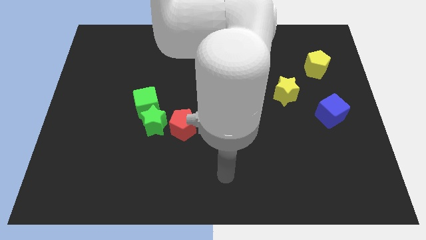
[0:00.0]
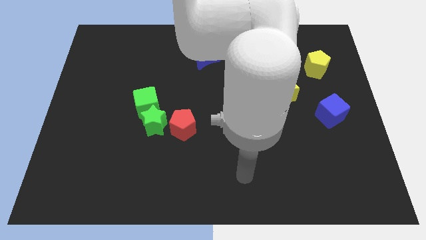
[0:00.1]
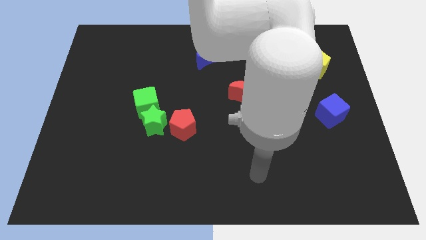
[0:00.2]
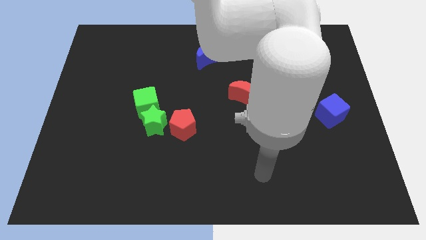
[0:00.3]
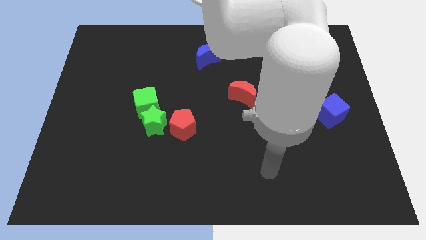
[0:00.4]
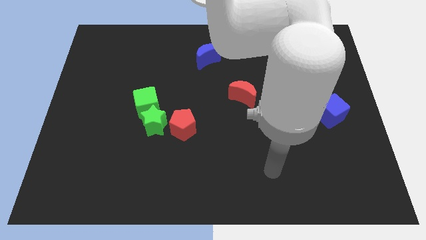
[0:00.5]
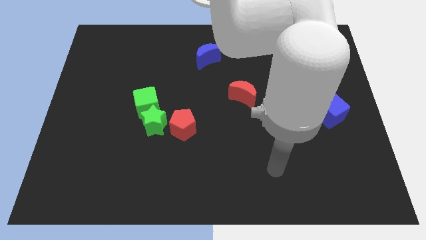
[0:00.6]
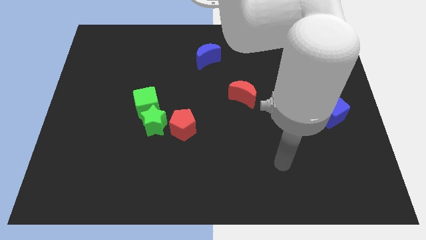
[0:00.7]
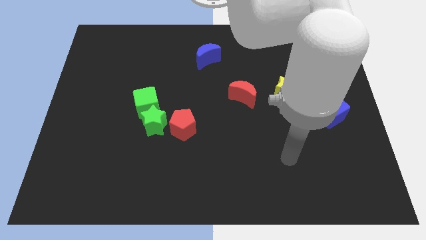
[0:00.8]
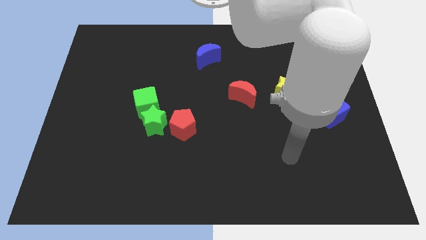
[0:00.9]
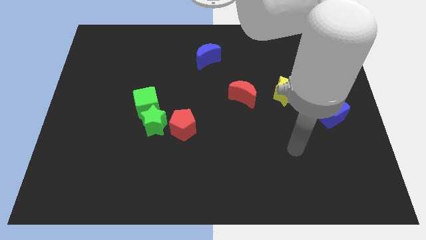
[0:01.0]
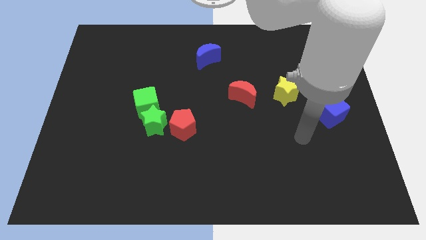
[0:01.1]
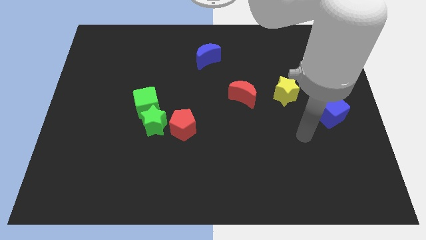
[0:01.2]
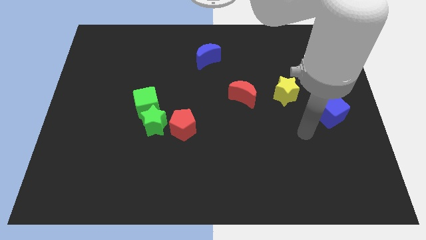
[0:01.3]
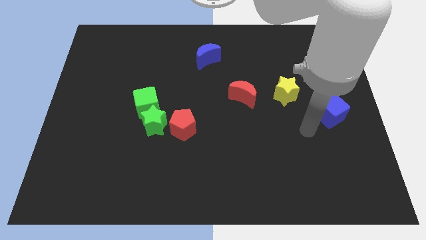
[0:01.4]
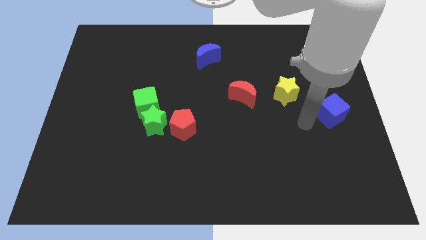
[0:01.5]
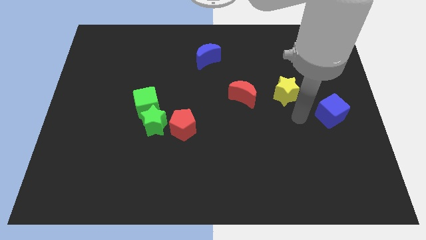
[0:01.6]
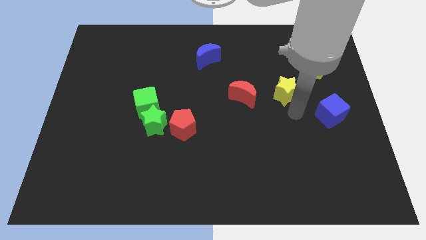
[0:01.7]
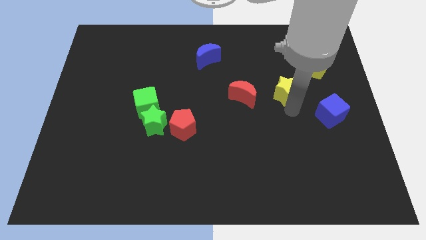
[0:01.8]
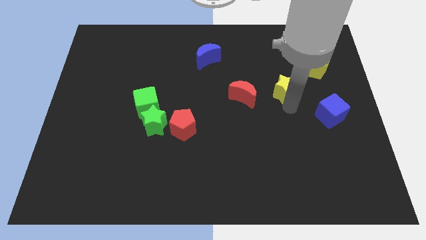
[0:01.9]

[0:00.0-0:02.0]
move your arm at the bottom of the yellow star

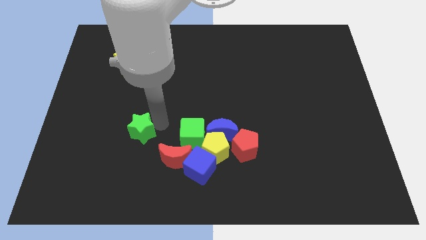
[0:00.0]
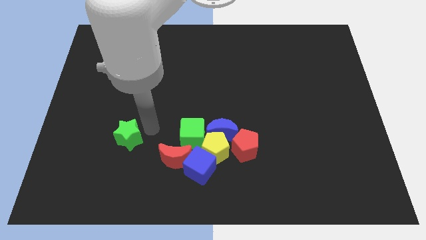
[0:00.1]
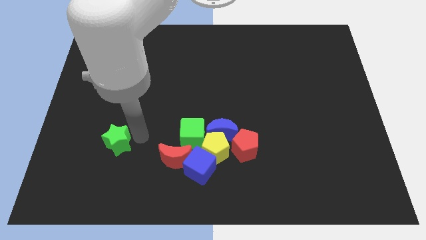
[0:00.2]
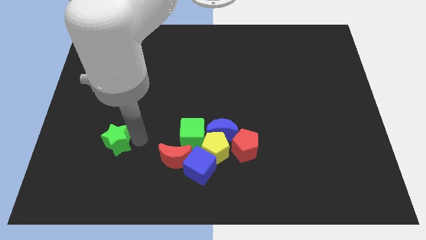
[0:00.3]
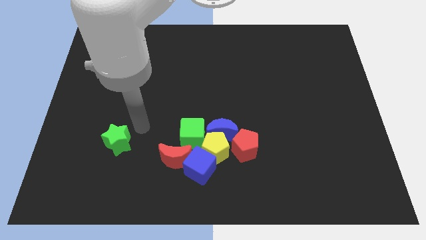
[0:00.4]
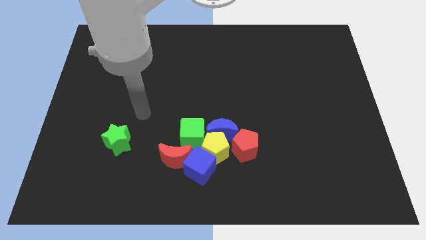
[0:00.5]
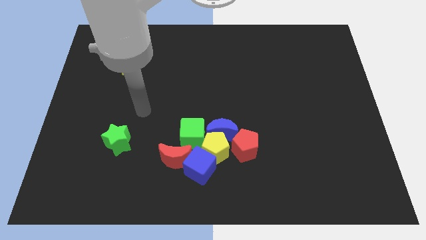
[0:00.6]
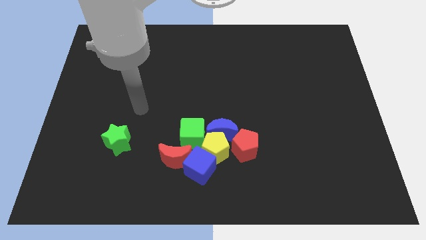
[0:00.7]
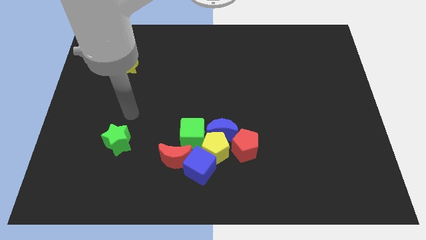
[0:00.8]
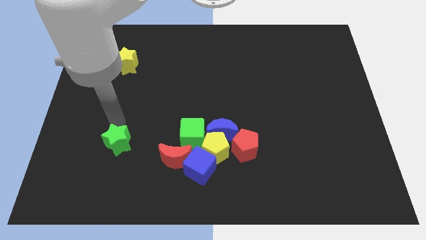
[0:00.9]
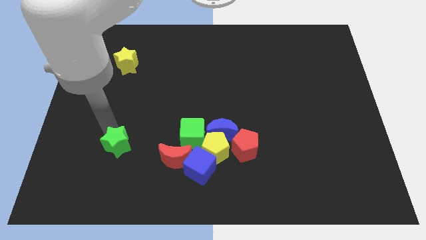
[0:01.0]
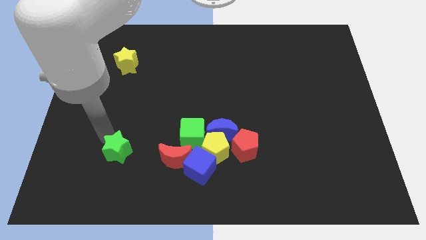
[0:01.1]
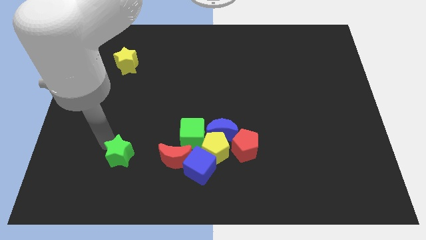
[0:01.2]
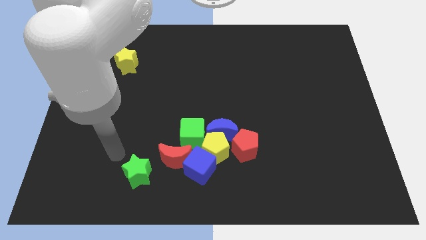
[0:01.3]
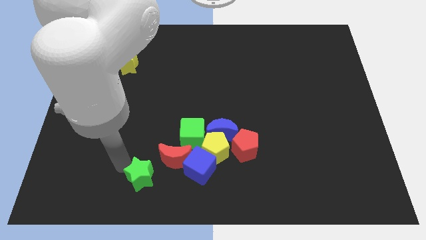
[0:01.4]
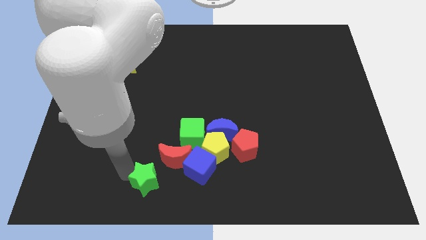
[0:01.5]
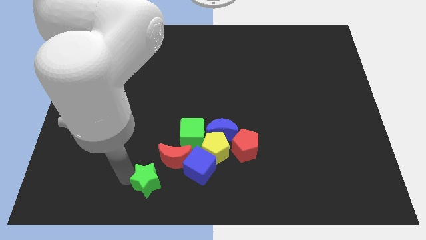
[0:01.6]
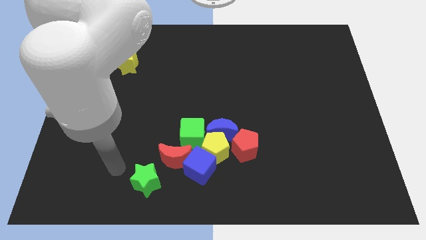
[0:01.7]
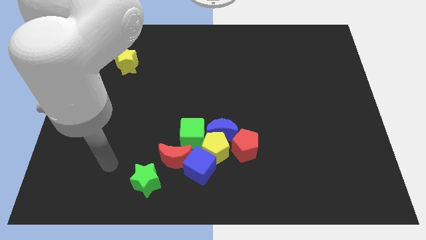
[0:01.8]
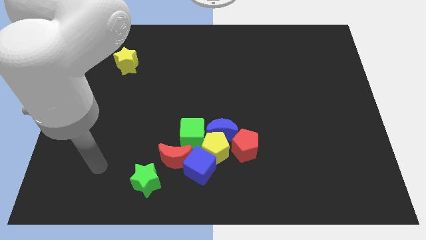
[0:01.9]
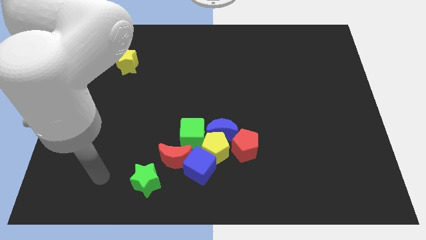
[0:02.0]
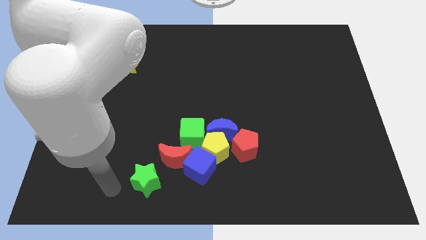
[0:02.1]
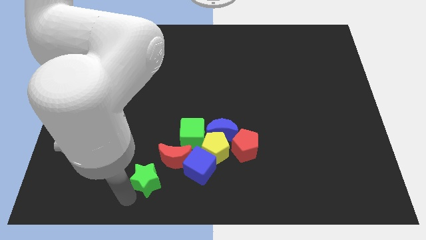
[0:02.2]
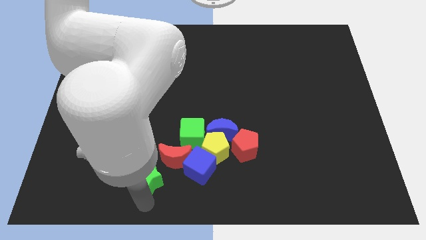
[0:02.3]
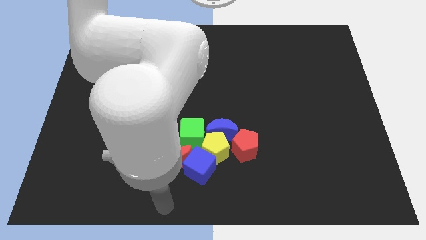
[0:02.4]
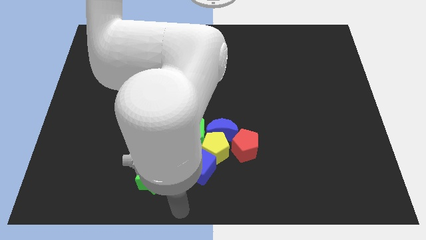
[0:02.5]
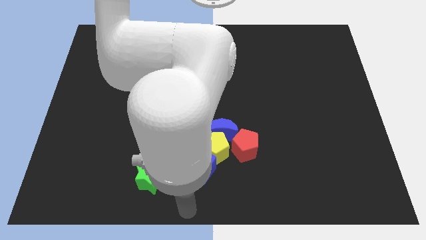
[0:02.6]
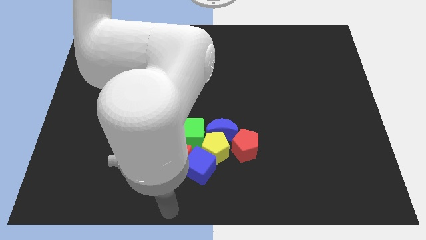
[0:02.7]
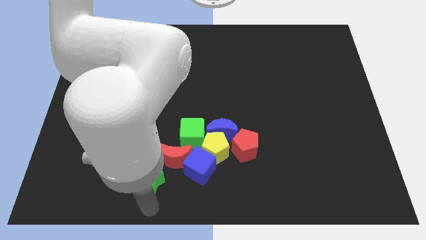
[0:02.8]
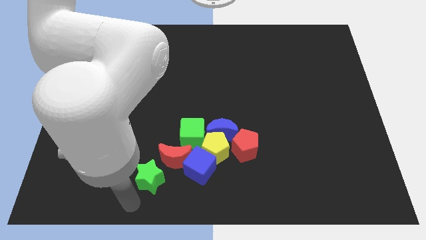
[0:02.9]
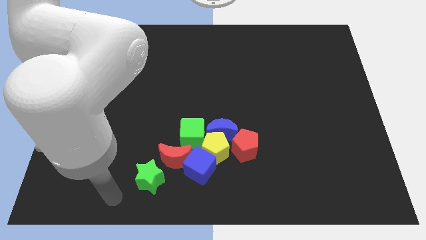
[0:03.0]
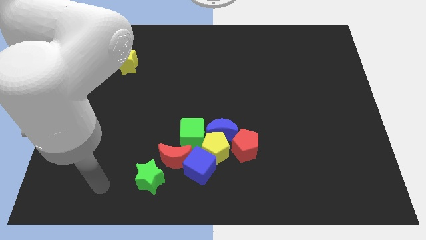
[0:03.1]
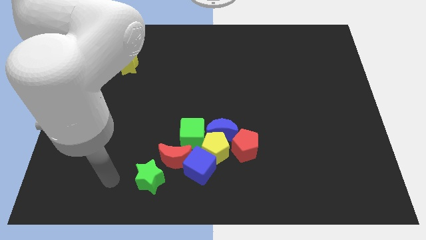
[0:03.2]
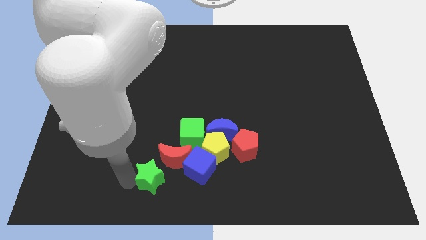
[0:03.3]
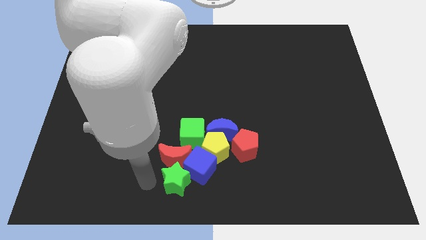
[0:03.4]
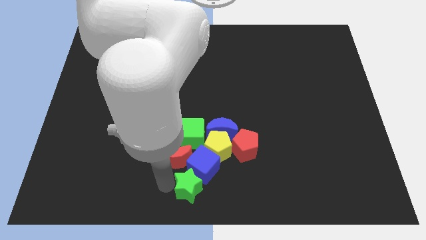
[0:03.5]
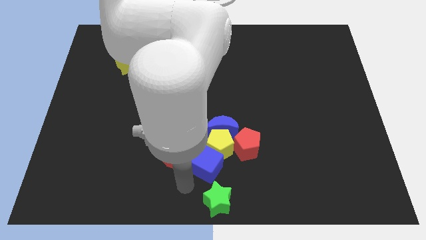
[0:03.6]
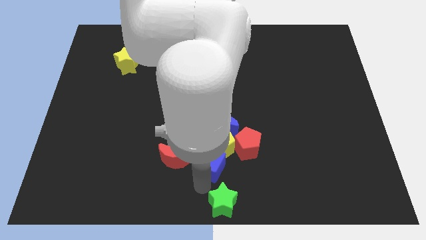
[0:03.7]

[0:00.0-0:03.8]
slide the green star to the bottom centre of the board

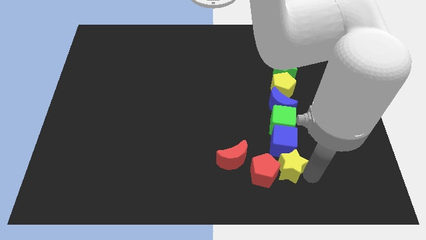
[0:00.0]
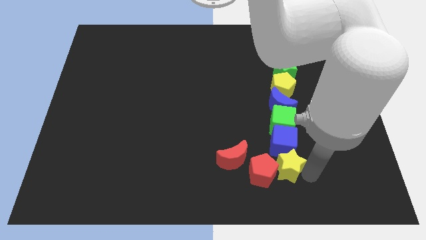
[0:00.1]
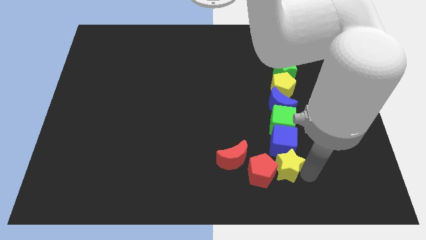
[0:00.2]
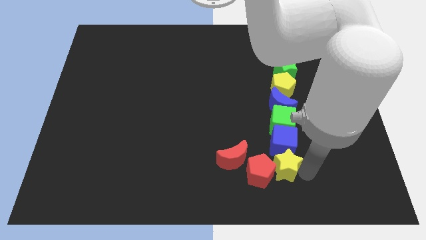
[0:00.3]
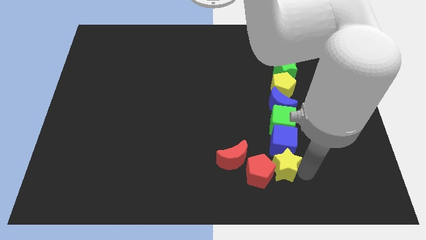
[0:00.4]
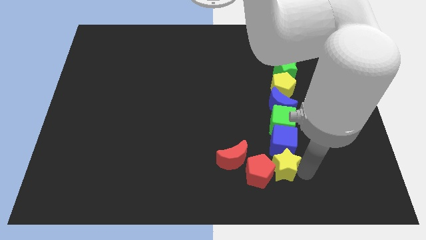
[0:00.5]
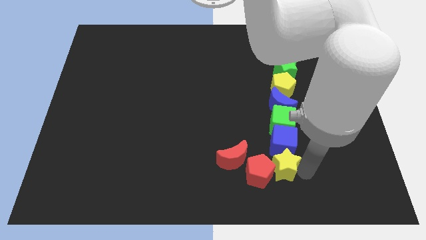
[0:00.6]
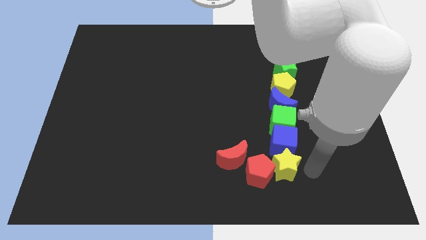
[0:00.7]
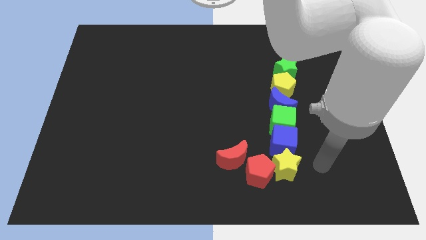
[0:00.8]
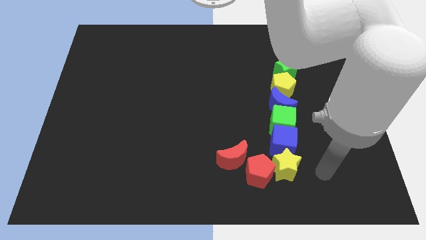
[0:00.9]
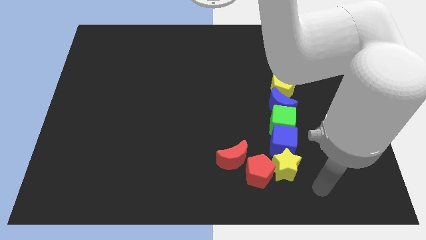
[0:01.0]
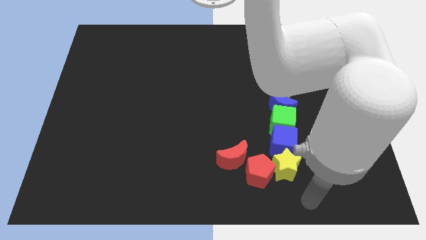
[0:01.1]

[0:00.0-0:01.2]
move yellow star below blue cube

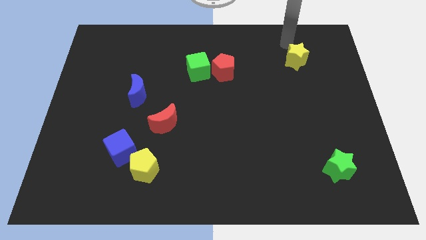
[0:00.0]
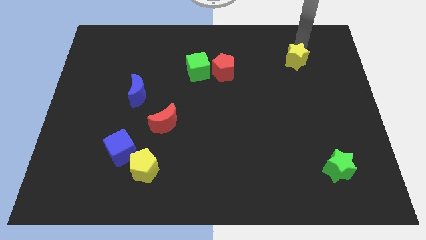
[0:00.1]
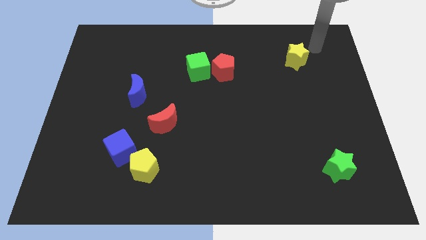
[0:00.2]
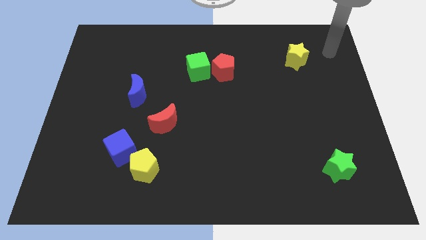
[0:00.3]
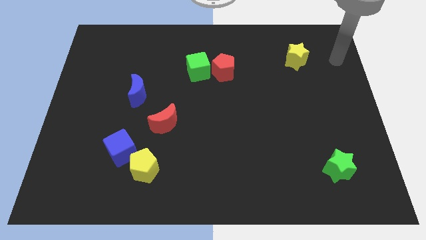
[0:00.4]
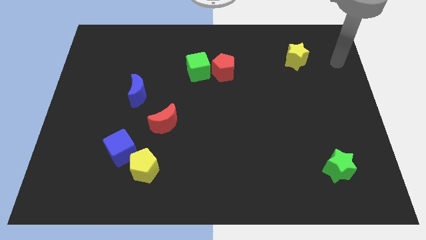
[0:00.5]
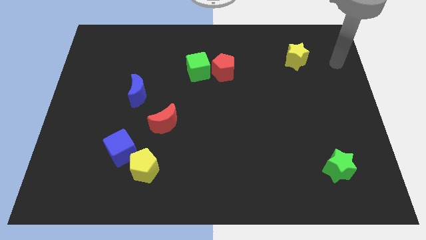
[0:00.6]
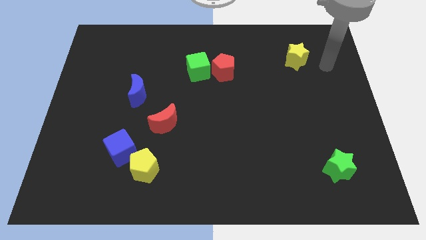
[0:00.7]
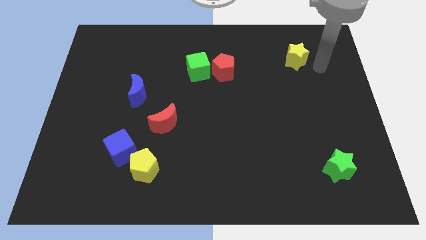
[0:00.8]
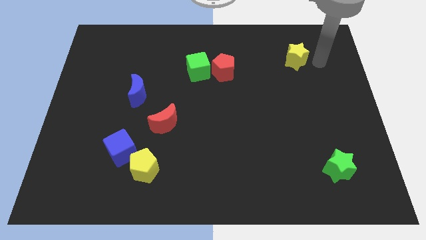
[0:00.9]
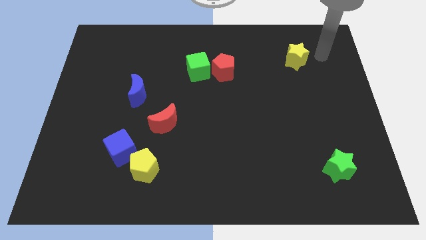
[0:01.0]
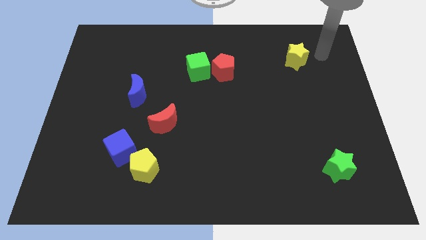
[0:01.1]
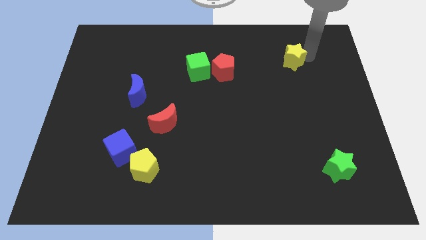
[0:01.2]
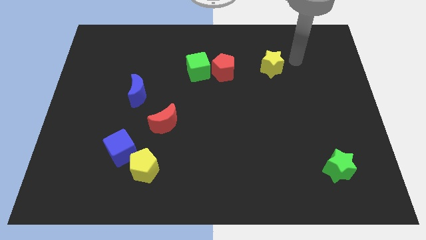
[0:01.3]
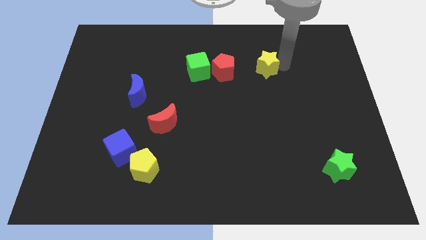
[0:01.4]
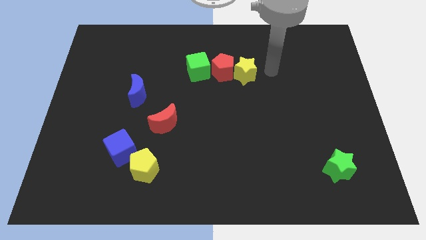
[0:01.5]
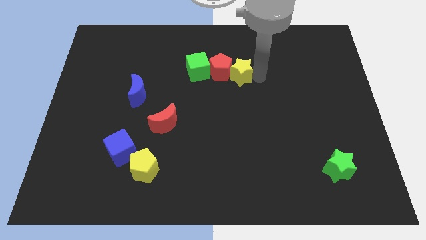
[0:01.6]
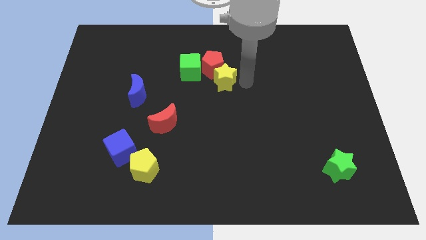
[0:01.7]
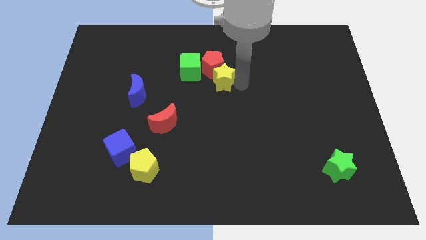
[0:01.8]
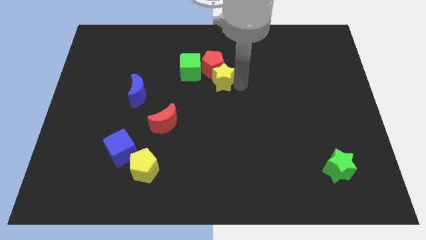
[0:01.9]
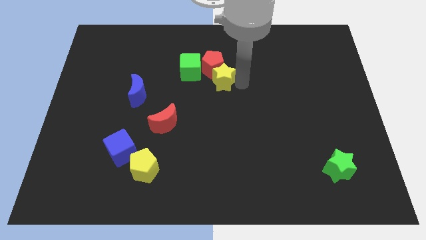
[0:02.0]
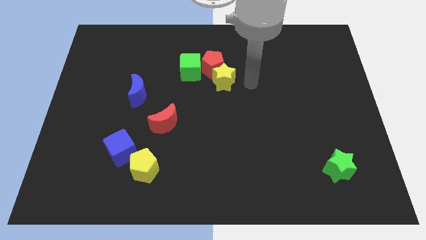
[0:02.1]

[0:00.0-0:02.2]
push the yellow star towards the red pentagon
